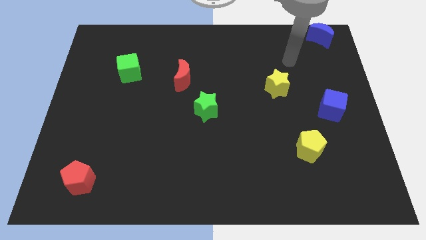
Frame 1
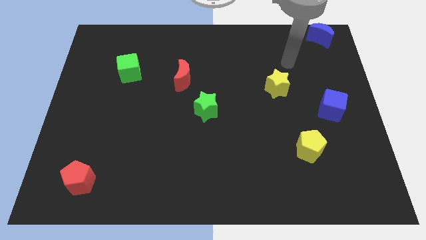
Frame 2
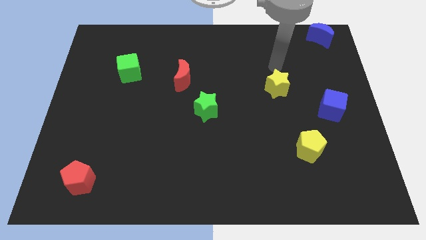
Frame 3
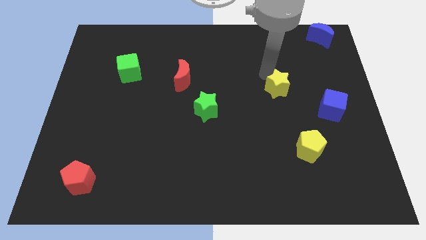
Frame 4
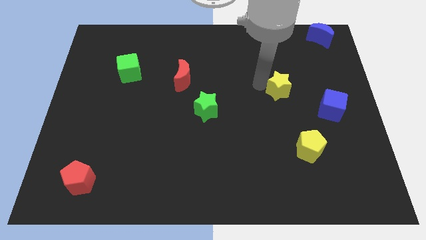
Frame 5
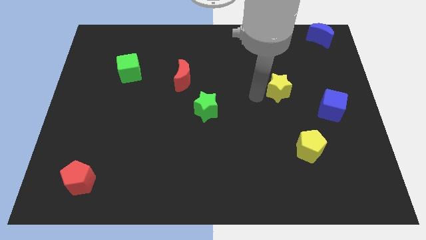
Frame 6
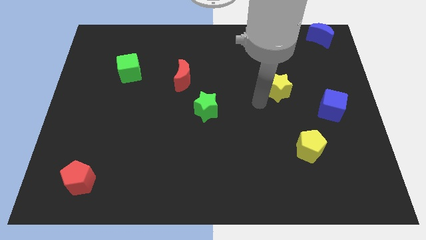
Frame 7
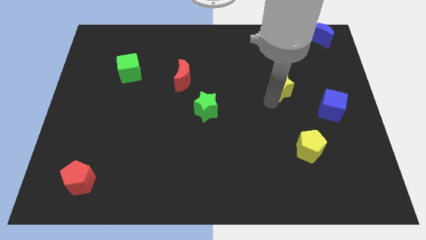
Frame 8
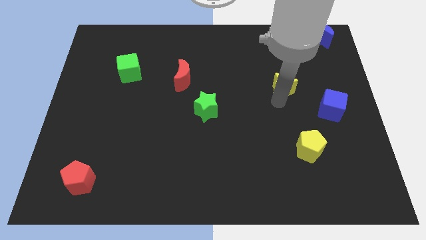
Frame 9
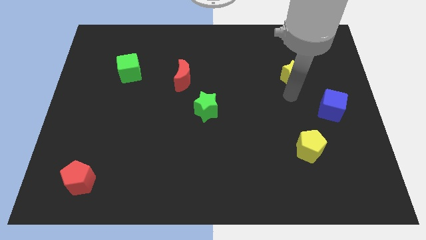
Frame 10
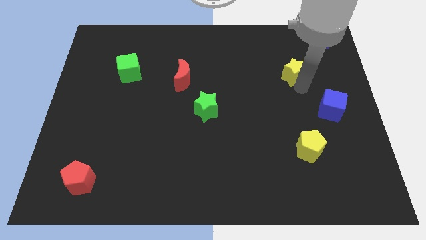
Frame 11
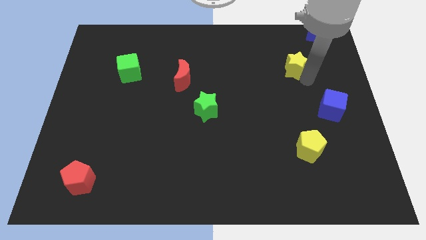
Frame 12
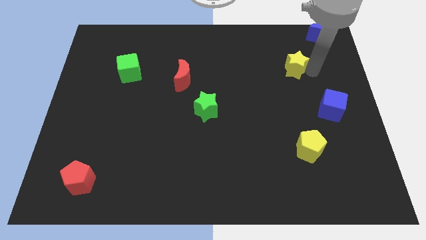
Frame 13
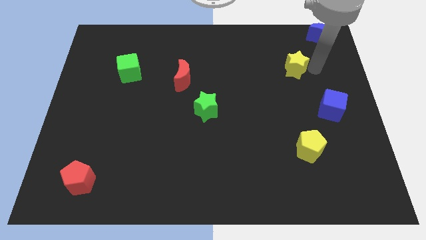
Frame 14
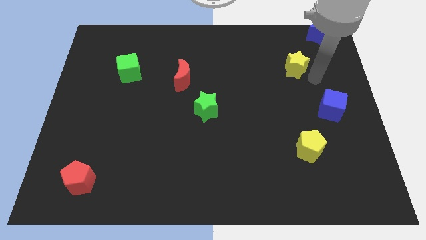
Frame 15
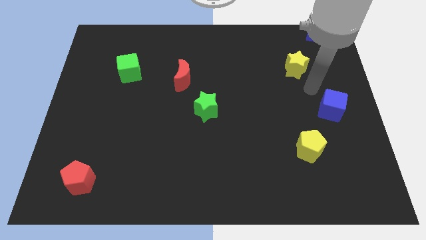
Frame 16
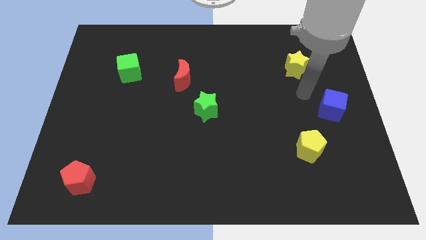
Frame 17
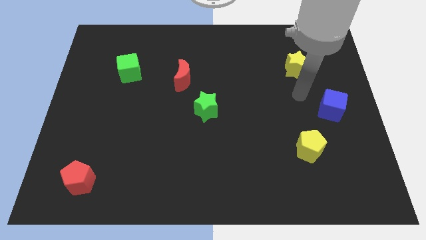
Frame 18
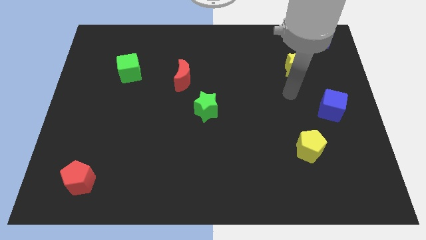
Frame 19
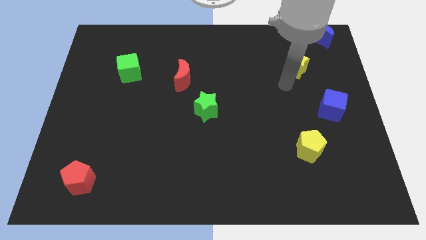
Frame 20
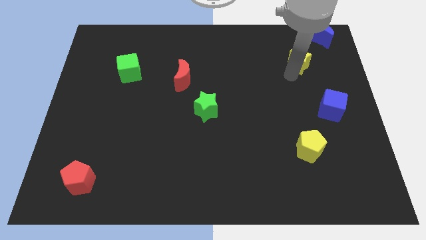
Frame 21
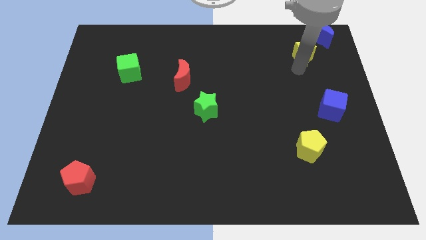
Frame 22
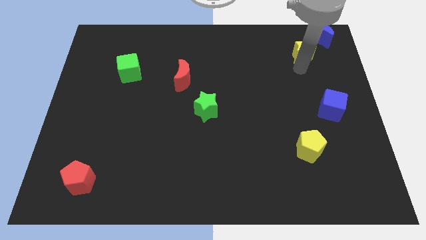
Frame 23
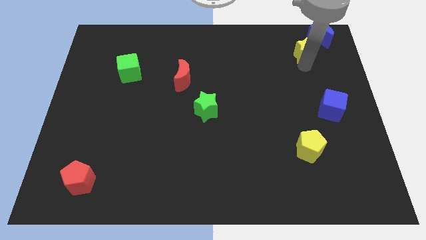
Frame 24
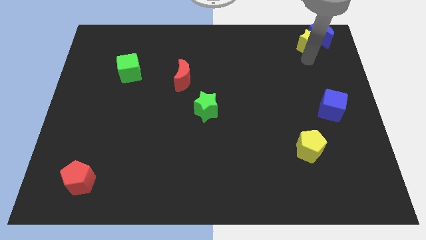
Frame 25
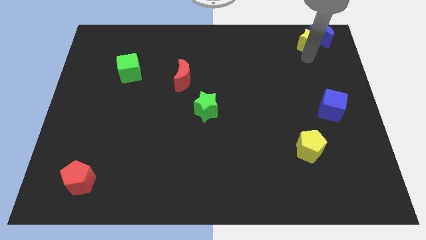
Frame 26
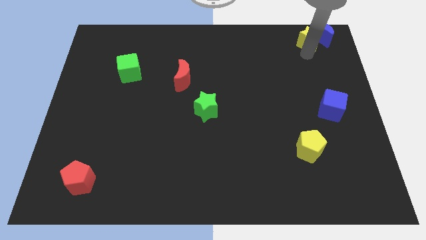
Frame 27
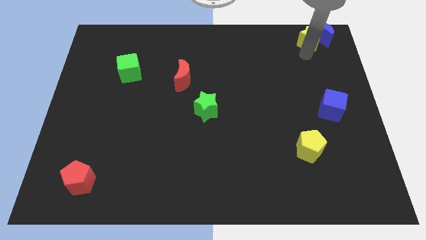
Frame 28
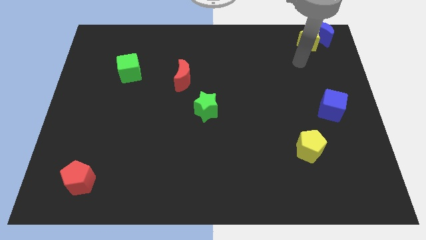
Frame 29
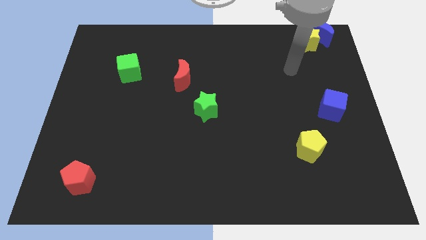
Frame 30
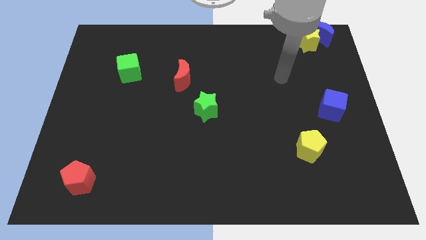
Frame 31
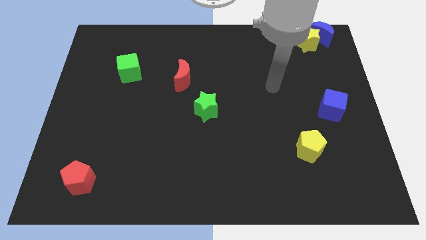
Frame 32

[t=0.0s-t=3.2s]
place the yellow star and blue crescent at the top right side of the board

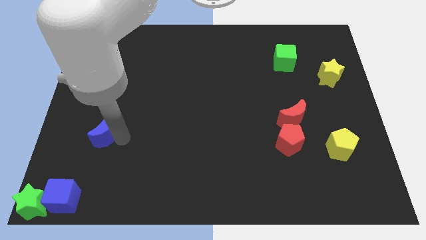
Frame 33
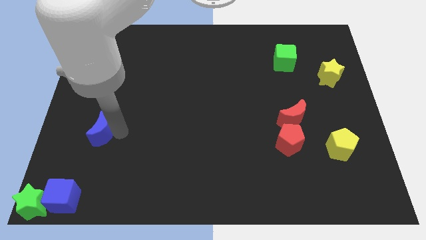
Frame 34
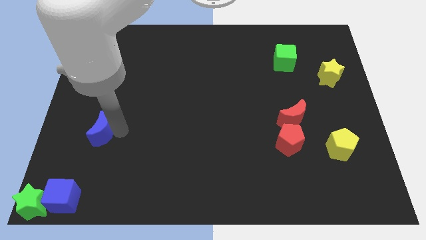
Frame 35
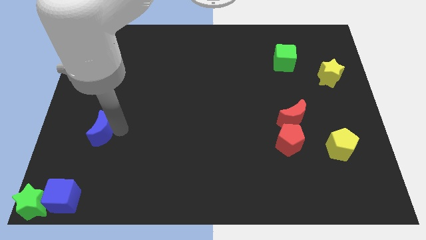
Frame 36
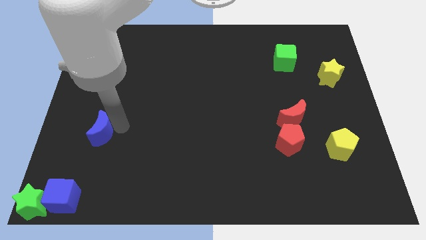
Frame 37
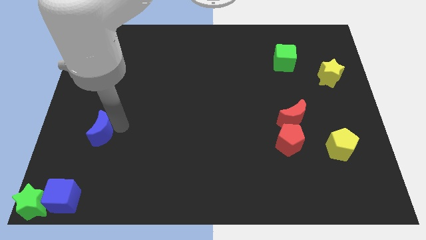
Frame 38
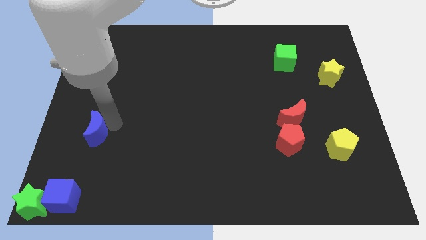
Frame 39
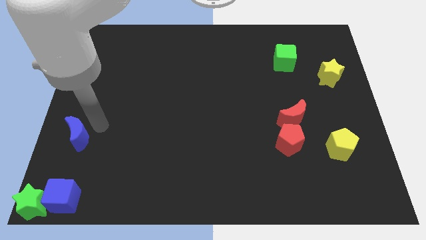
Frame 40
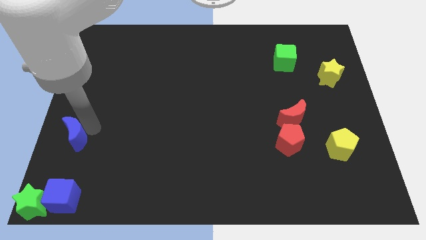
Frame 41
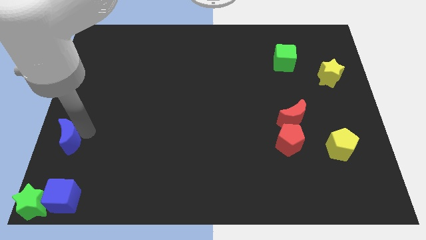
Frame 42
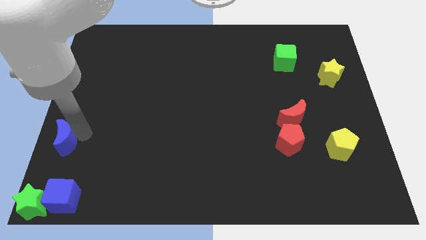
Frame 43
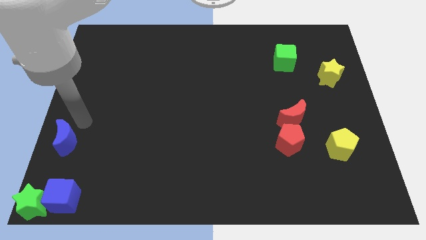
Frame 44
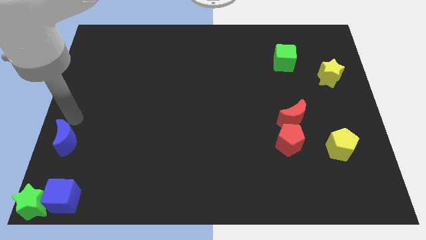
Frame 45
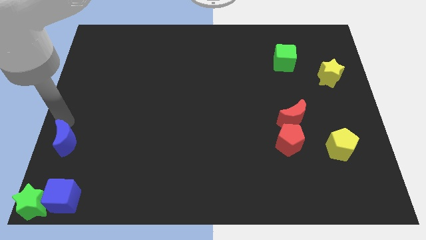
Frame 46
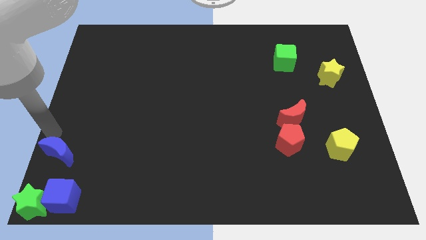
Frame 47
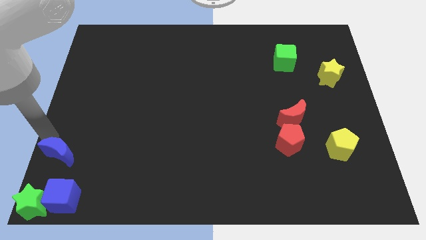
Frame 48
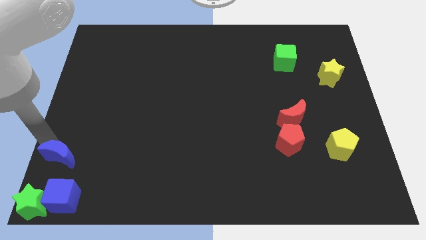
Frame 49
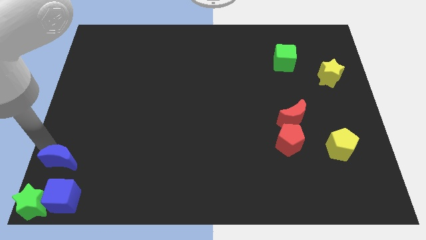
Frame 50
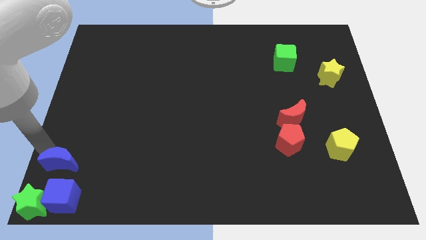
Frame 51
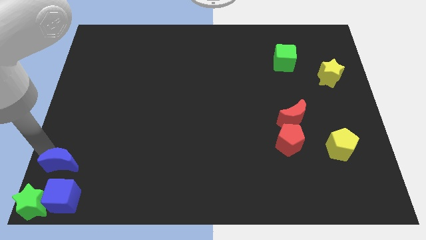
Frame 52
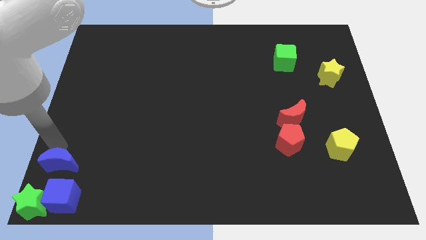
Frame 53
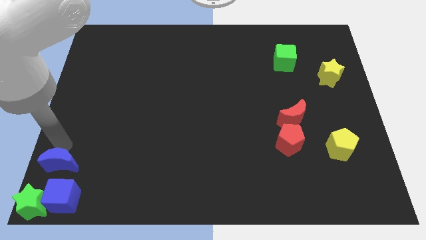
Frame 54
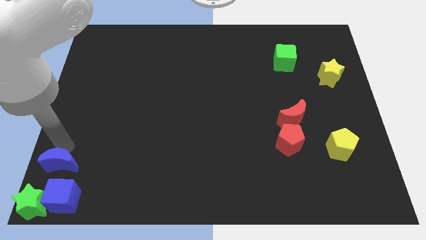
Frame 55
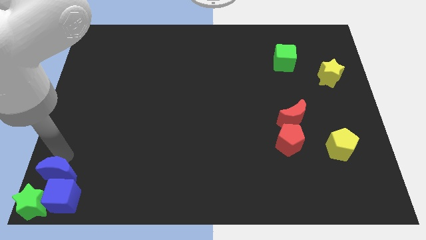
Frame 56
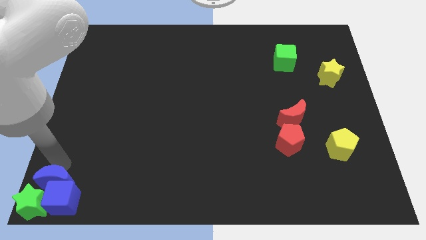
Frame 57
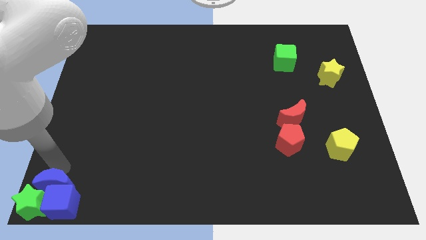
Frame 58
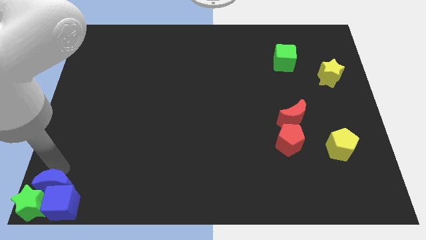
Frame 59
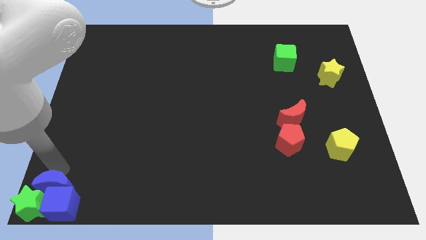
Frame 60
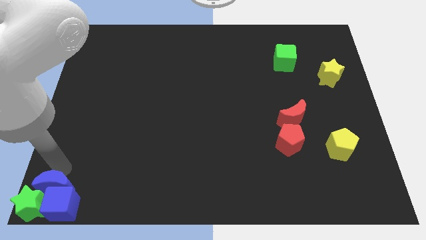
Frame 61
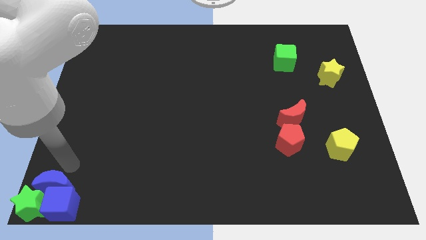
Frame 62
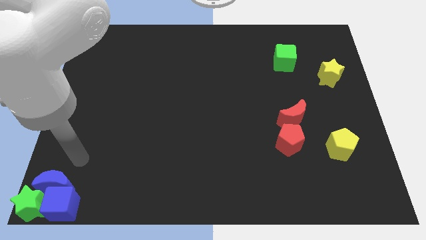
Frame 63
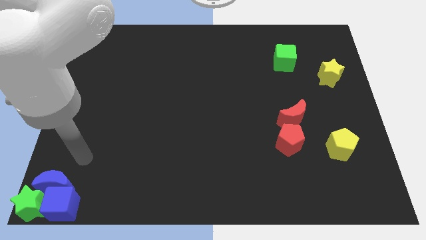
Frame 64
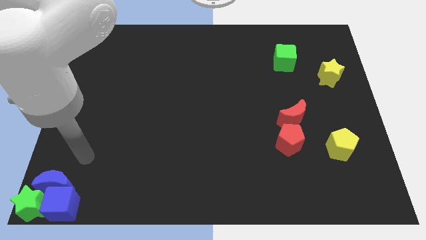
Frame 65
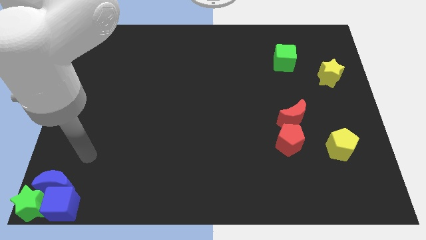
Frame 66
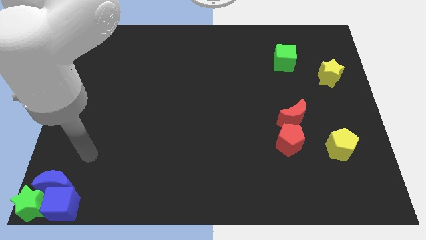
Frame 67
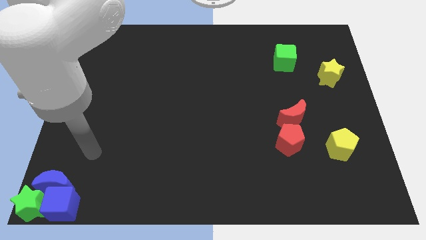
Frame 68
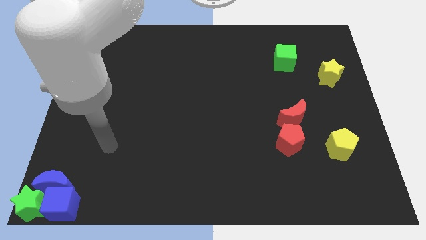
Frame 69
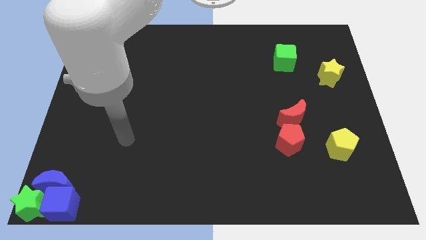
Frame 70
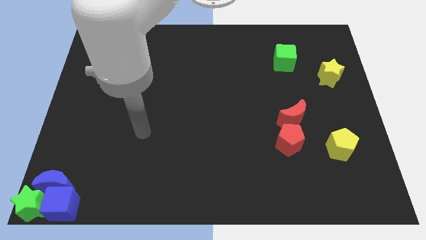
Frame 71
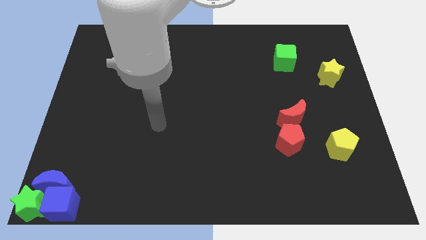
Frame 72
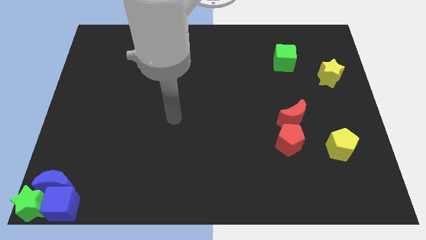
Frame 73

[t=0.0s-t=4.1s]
place the blue moon to the top of the blue cube

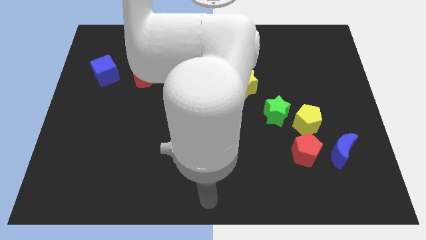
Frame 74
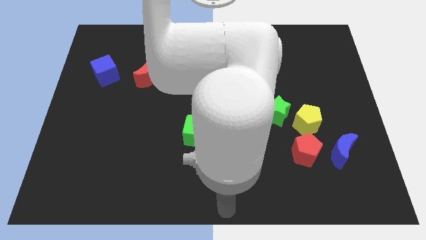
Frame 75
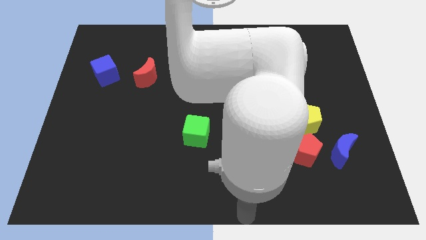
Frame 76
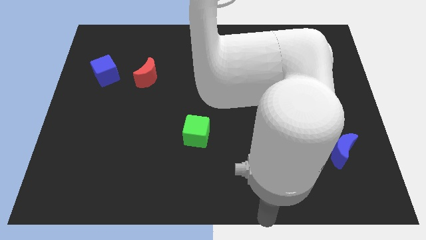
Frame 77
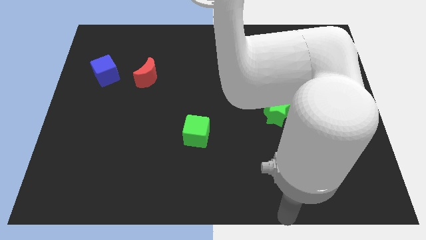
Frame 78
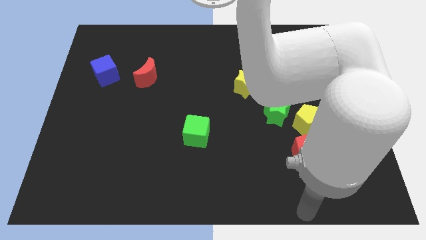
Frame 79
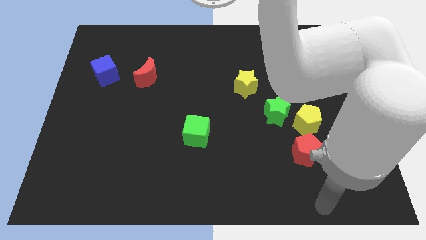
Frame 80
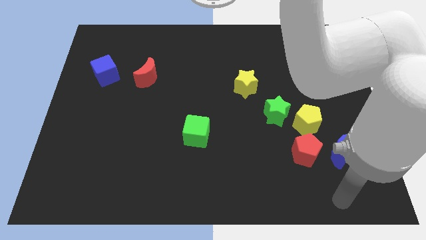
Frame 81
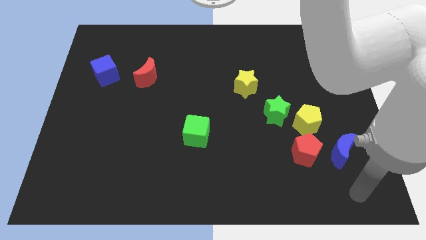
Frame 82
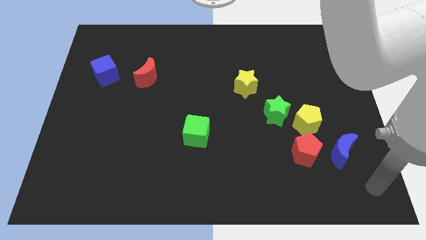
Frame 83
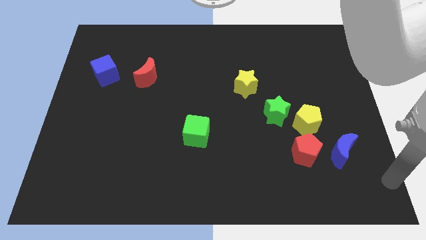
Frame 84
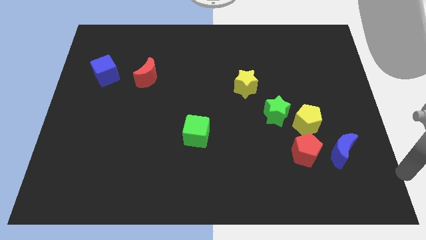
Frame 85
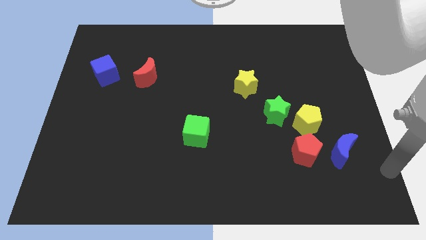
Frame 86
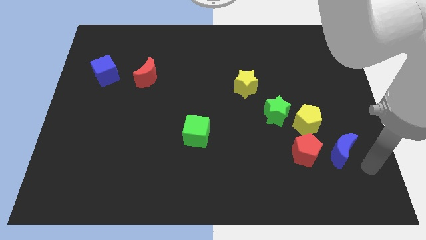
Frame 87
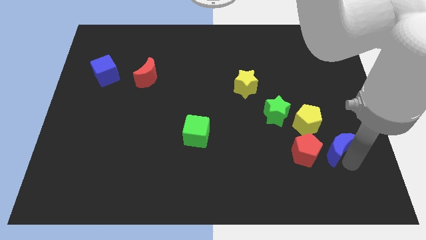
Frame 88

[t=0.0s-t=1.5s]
move your arm towards the blue moon

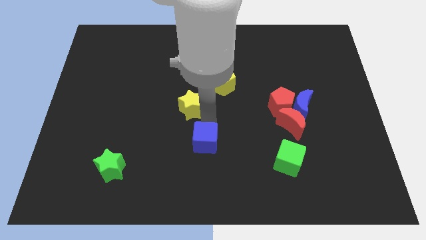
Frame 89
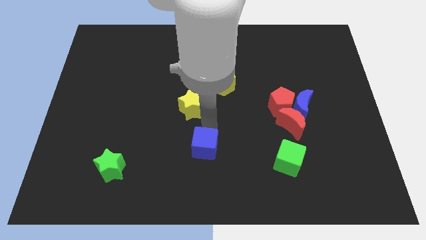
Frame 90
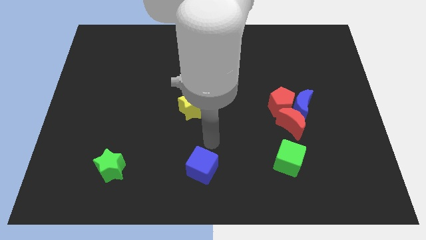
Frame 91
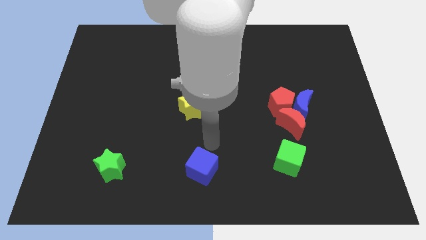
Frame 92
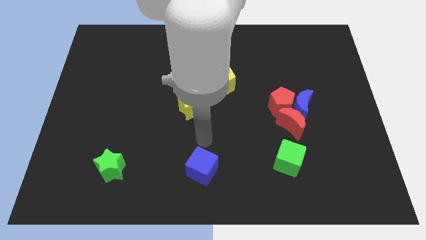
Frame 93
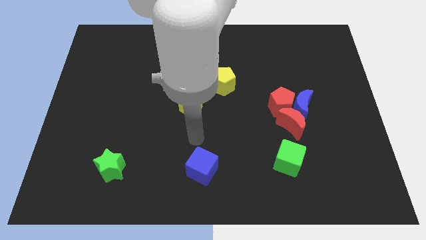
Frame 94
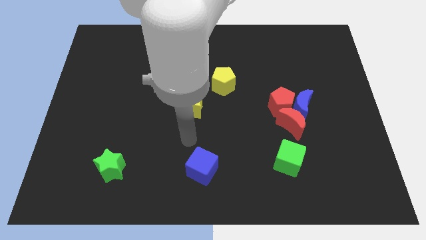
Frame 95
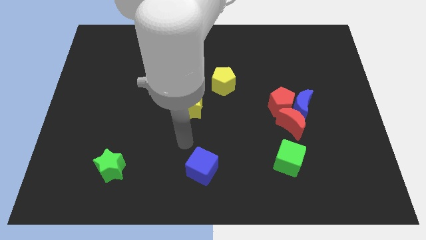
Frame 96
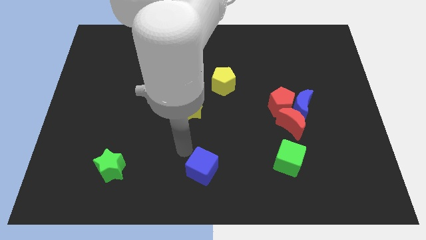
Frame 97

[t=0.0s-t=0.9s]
put the blue cube in between the green blocks
